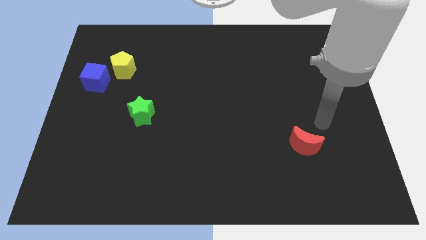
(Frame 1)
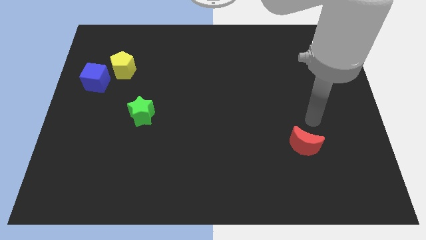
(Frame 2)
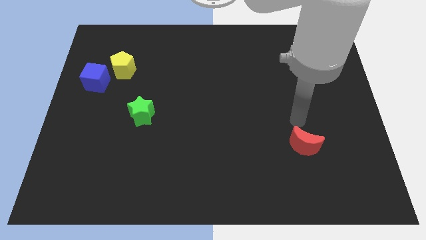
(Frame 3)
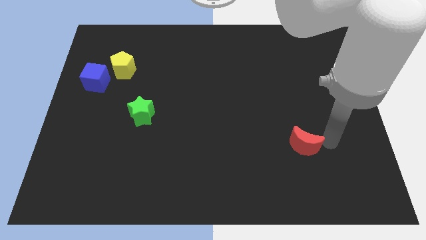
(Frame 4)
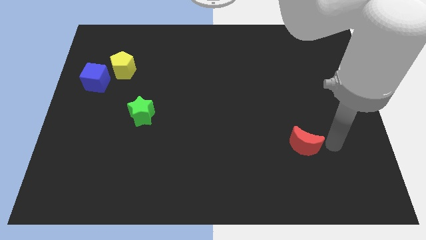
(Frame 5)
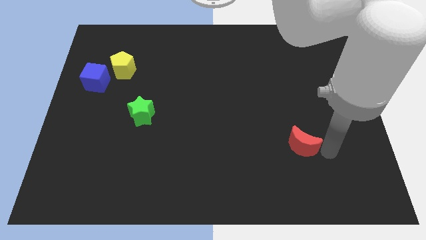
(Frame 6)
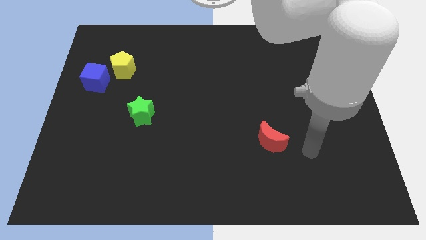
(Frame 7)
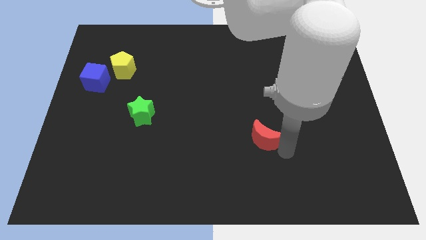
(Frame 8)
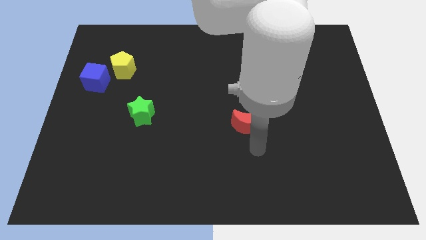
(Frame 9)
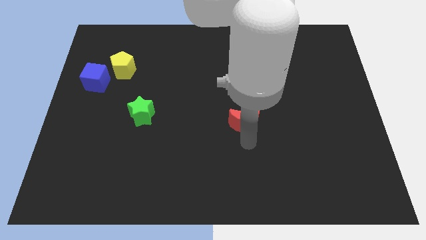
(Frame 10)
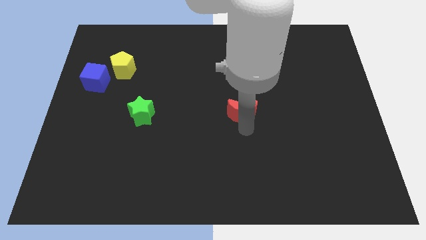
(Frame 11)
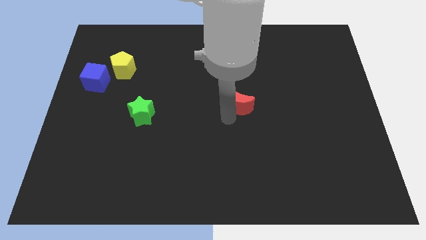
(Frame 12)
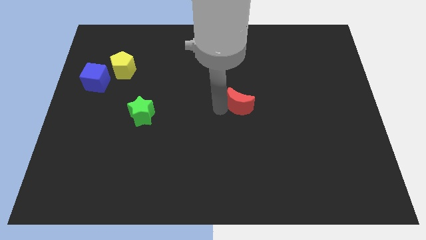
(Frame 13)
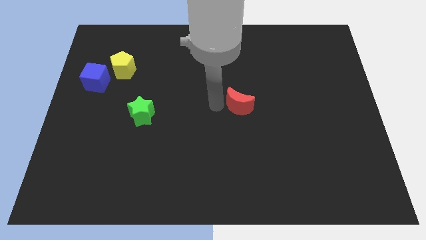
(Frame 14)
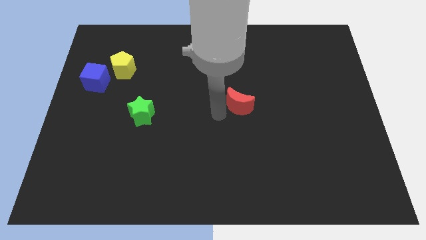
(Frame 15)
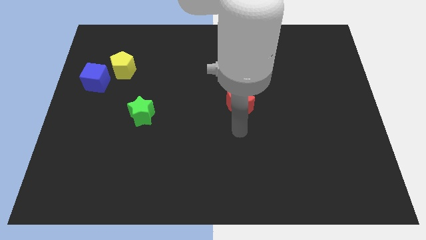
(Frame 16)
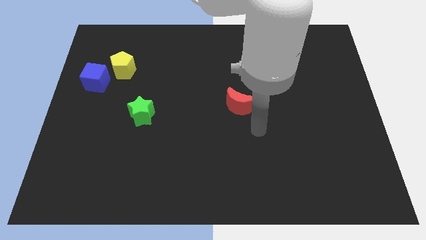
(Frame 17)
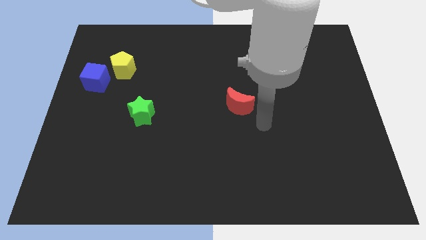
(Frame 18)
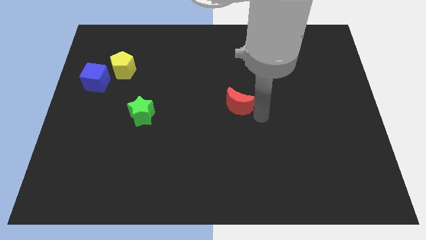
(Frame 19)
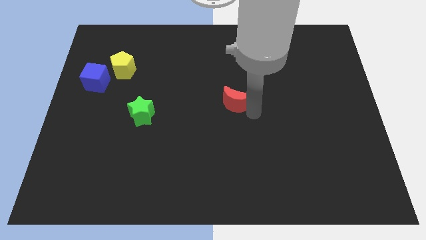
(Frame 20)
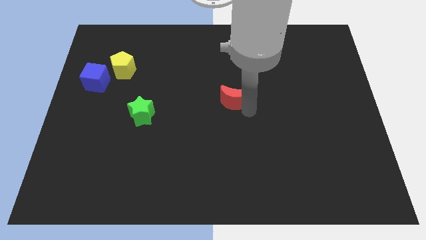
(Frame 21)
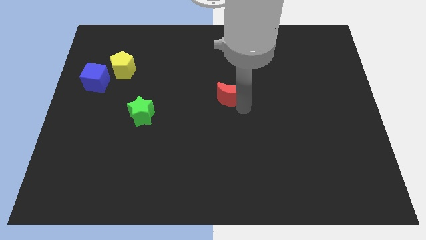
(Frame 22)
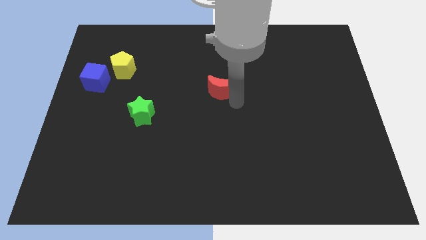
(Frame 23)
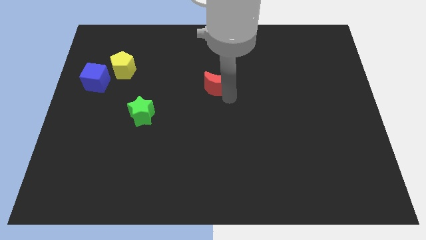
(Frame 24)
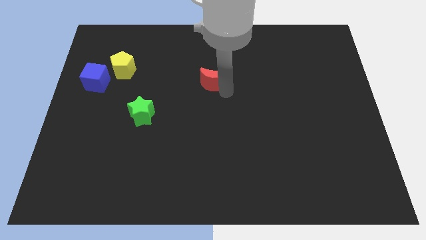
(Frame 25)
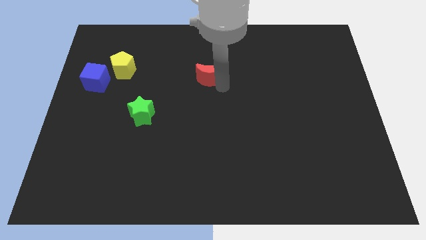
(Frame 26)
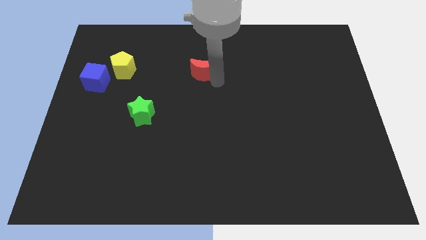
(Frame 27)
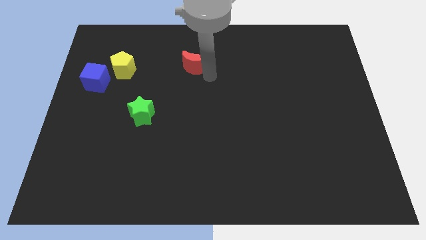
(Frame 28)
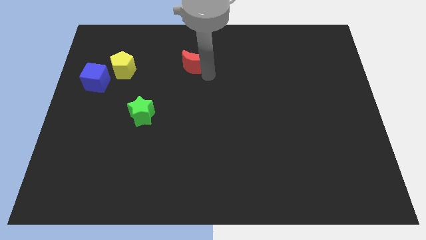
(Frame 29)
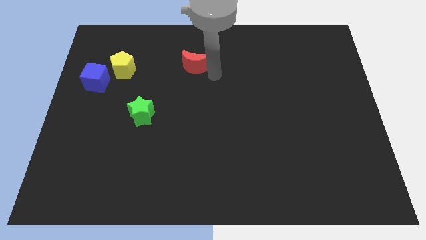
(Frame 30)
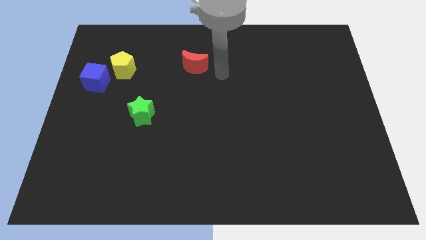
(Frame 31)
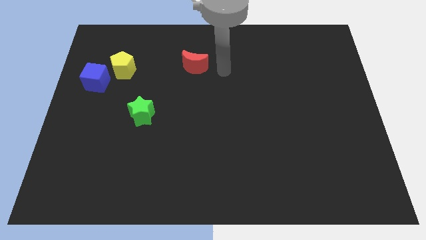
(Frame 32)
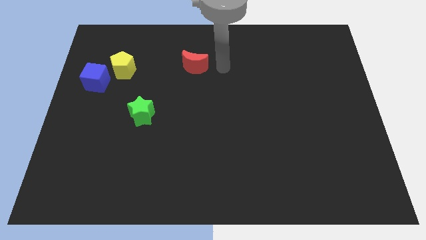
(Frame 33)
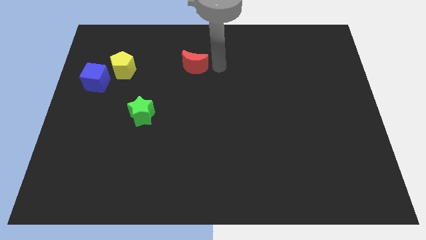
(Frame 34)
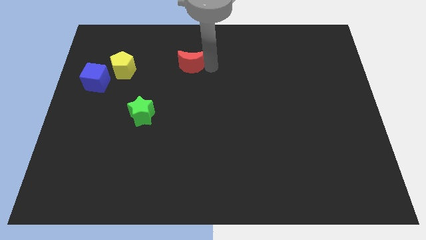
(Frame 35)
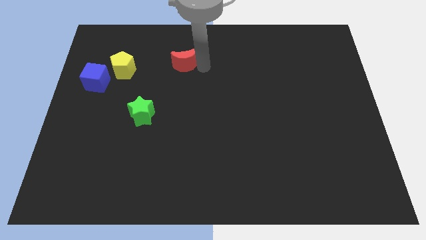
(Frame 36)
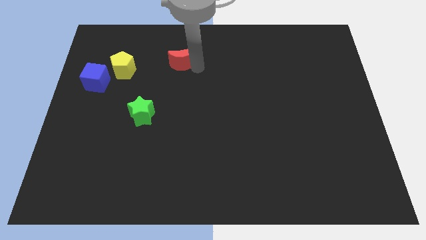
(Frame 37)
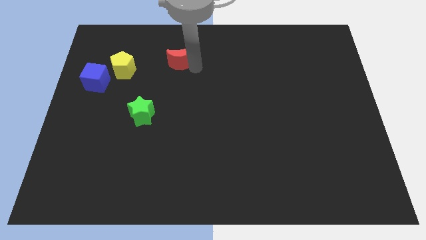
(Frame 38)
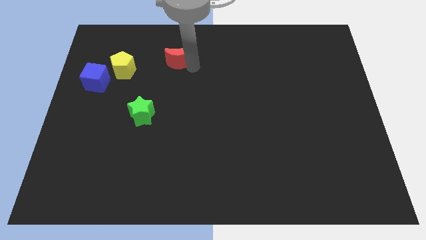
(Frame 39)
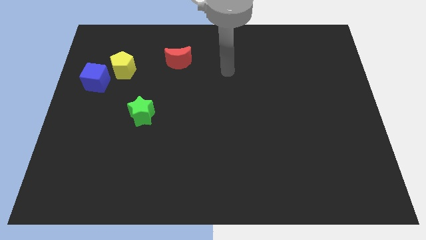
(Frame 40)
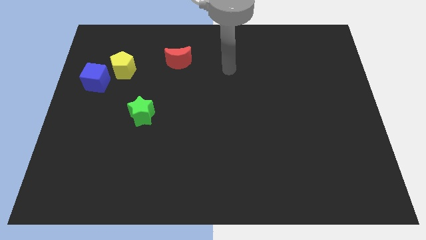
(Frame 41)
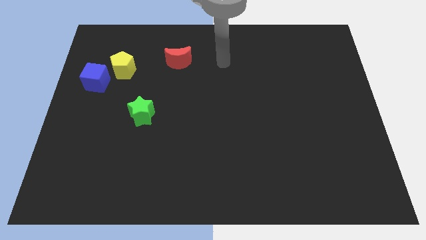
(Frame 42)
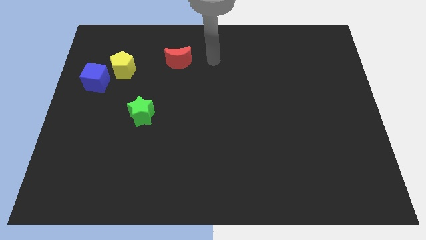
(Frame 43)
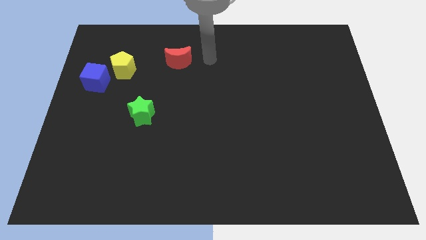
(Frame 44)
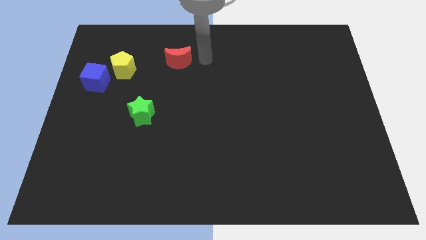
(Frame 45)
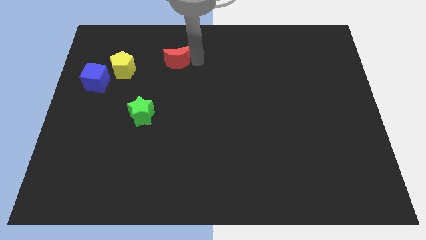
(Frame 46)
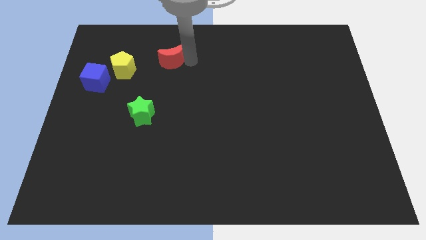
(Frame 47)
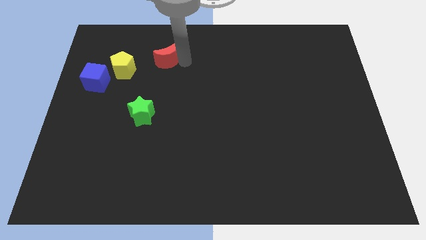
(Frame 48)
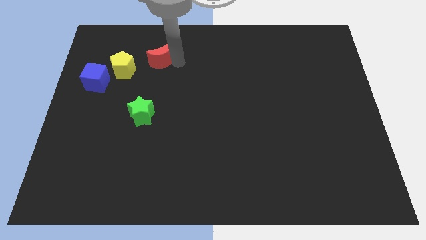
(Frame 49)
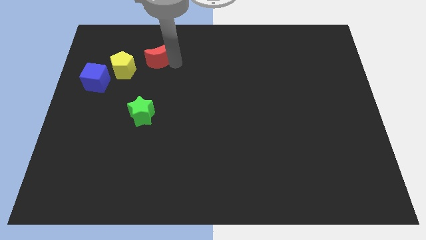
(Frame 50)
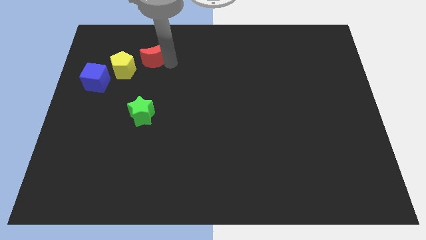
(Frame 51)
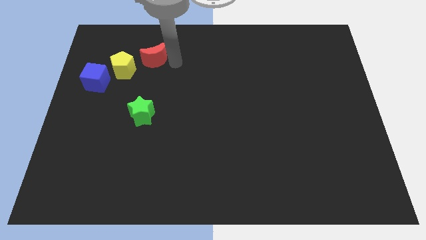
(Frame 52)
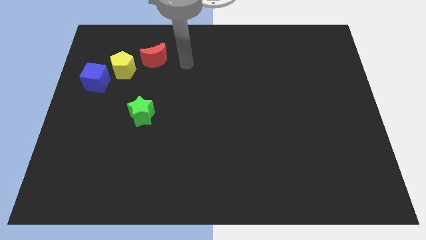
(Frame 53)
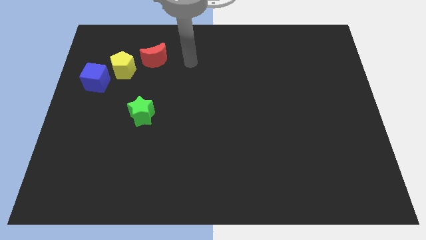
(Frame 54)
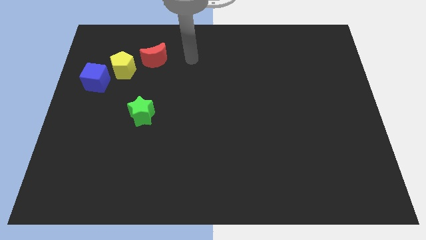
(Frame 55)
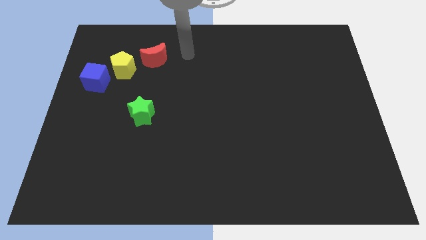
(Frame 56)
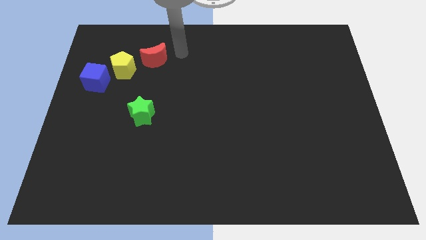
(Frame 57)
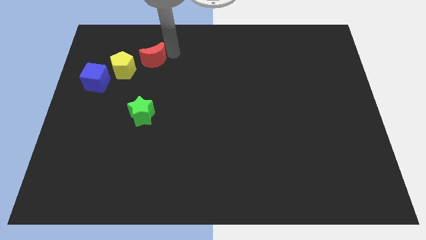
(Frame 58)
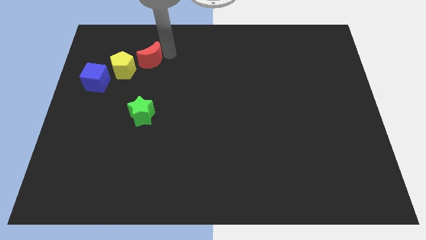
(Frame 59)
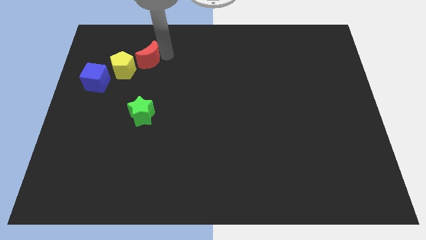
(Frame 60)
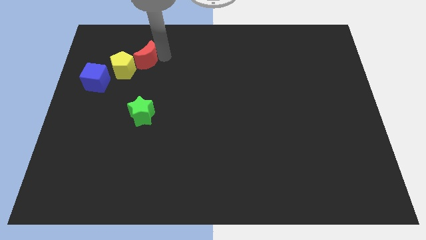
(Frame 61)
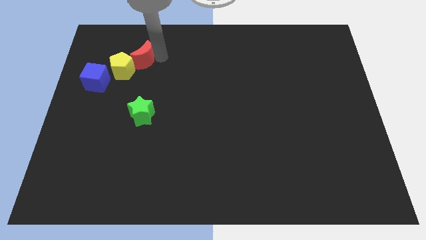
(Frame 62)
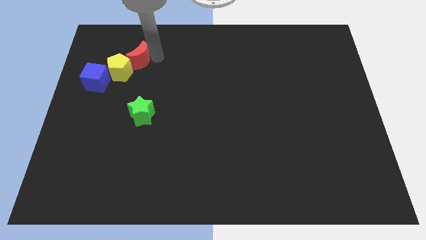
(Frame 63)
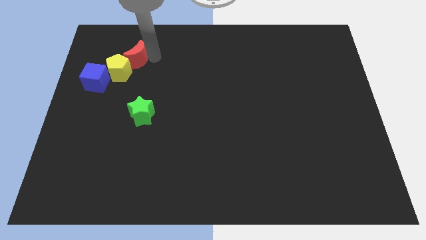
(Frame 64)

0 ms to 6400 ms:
slide the red moon towards the pentagon

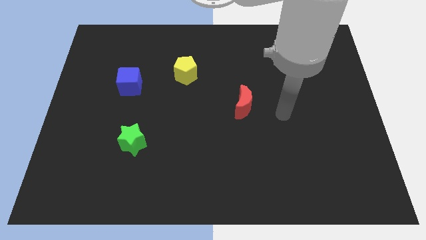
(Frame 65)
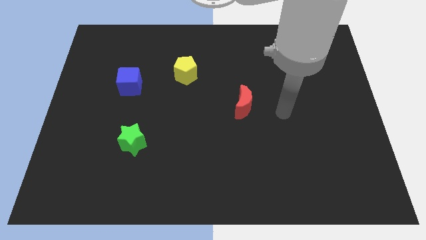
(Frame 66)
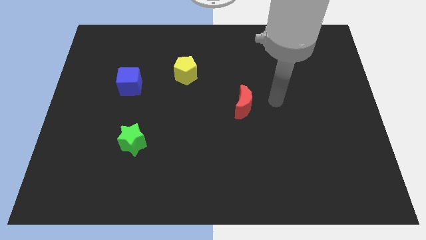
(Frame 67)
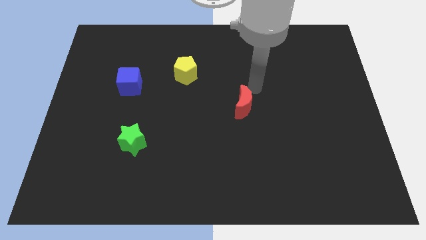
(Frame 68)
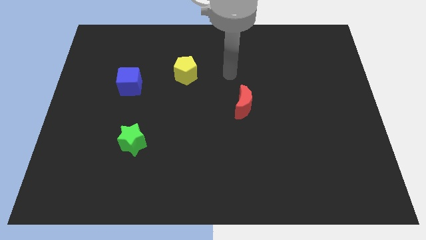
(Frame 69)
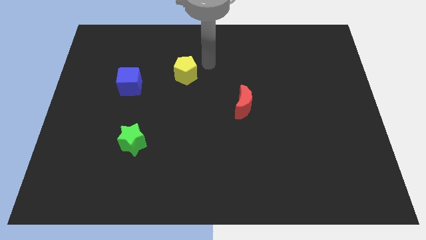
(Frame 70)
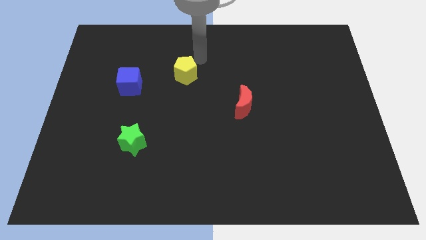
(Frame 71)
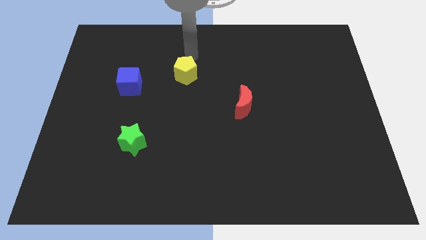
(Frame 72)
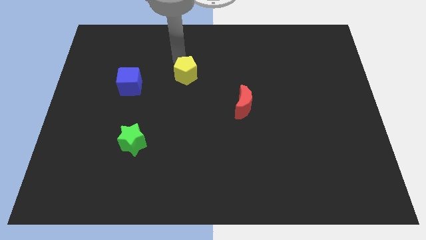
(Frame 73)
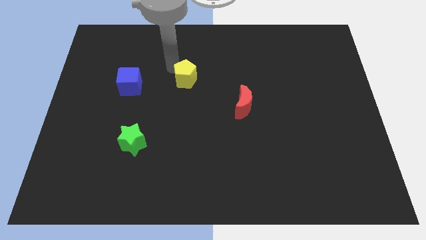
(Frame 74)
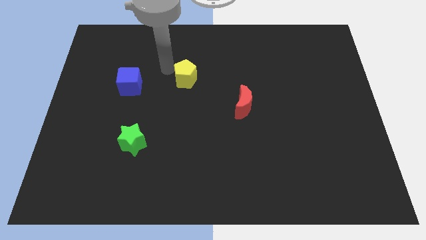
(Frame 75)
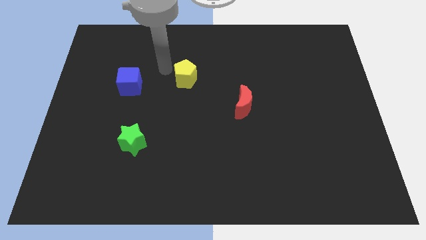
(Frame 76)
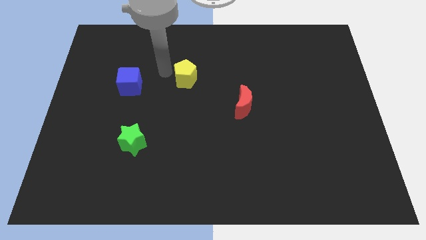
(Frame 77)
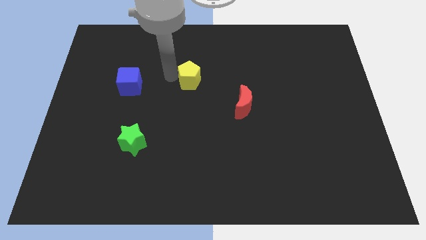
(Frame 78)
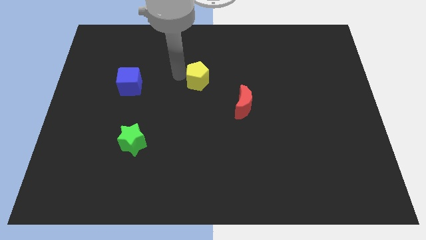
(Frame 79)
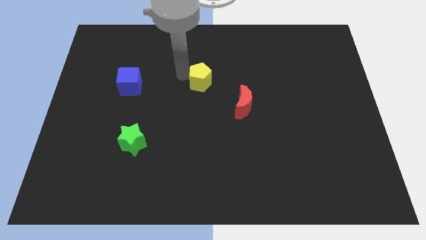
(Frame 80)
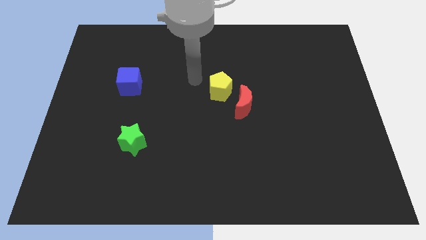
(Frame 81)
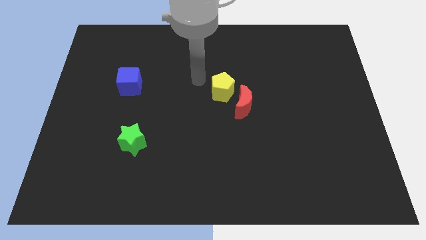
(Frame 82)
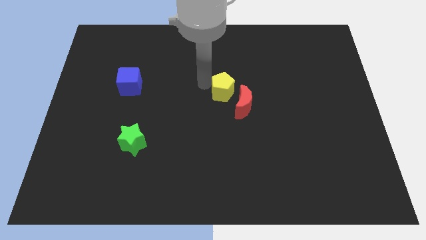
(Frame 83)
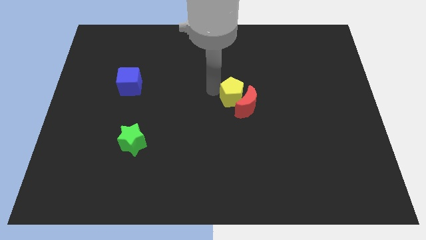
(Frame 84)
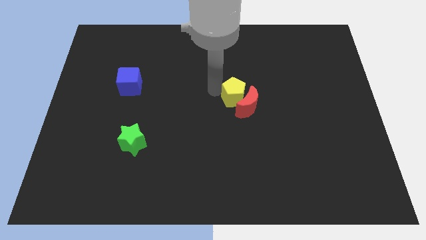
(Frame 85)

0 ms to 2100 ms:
slide the yellow block next to the red block
